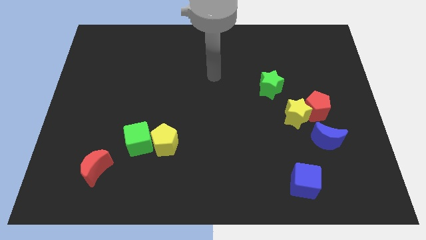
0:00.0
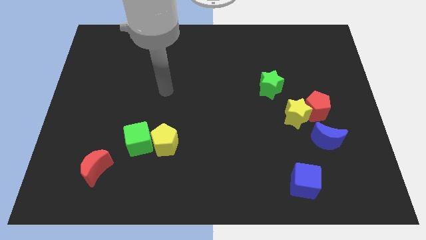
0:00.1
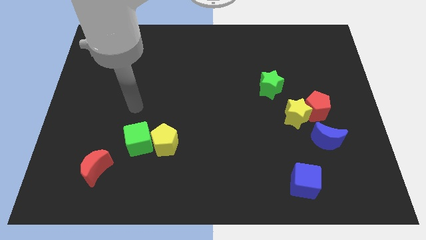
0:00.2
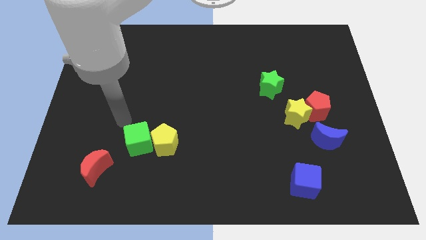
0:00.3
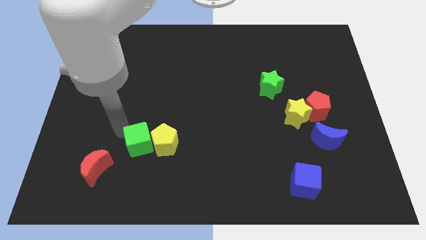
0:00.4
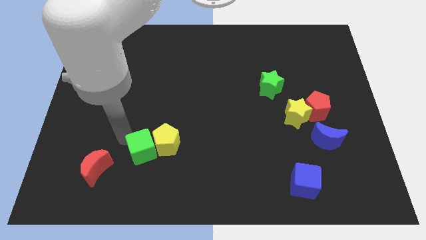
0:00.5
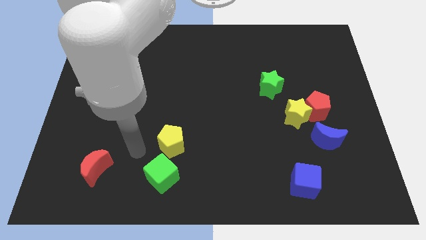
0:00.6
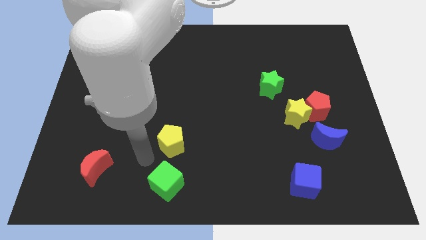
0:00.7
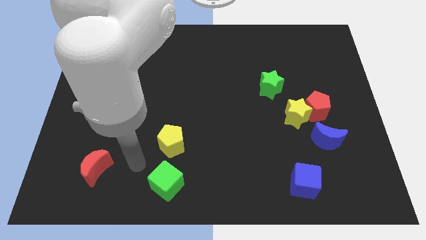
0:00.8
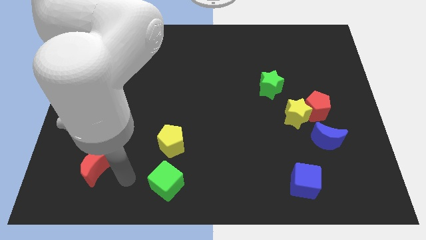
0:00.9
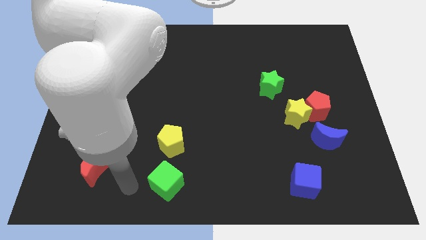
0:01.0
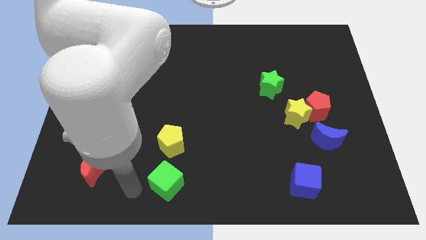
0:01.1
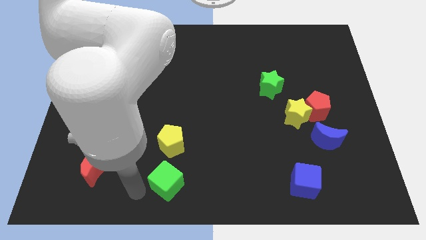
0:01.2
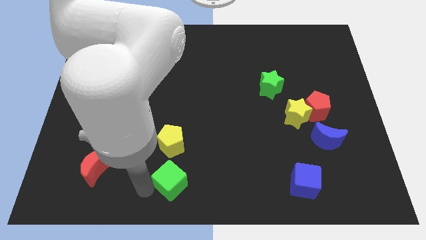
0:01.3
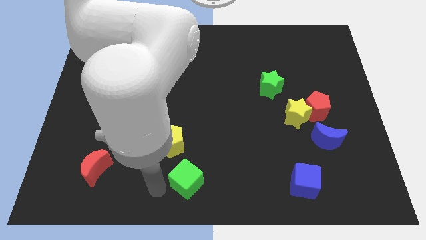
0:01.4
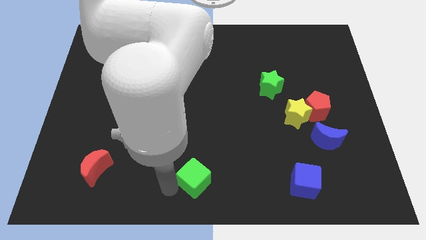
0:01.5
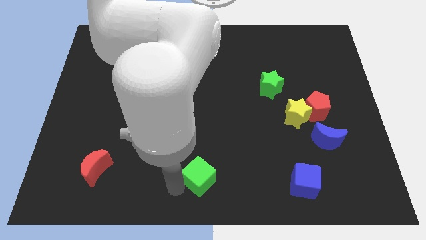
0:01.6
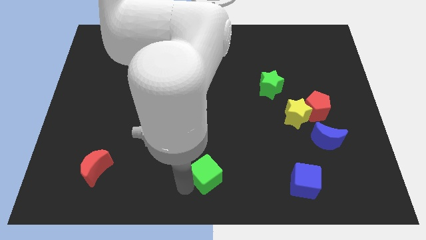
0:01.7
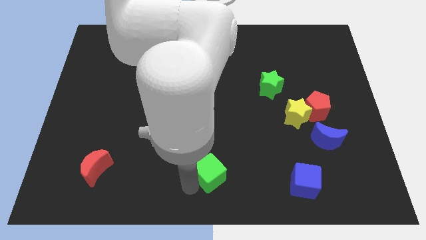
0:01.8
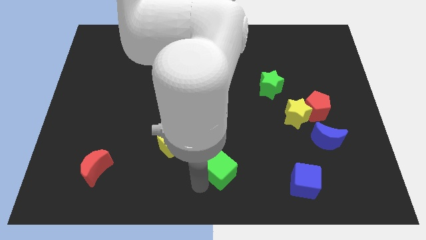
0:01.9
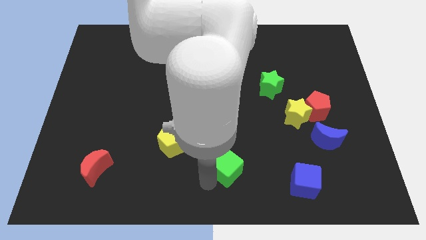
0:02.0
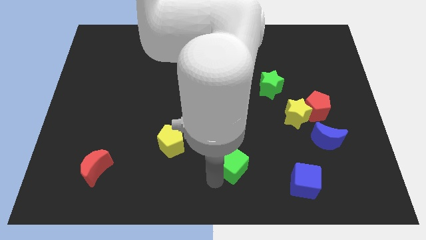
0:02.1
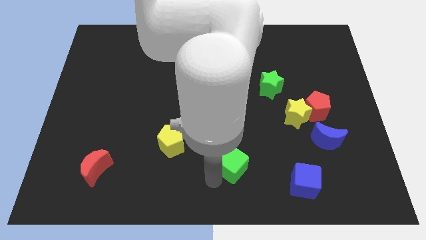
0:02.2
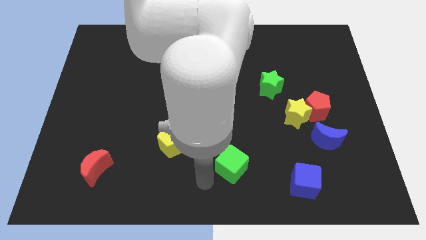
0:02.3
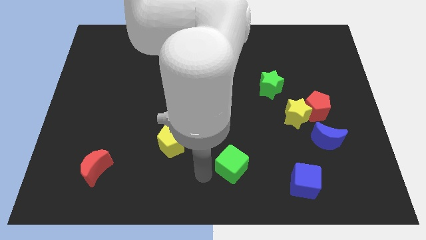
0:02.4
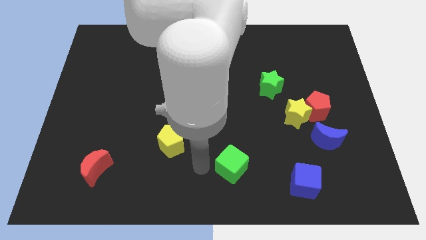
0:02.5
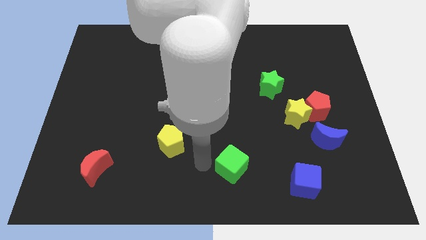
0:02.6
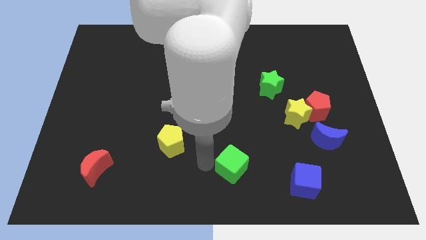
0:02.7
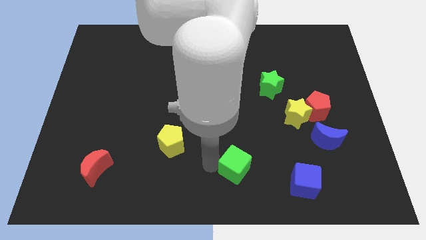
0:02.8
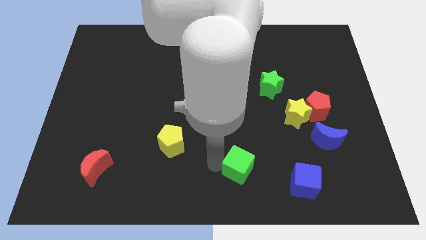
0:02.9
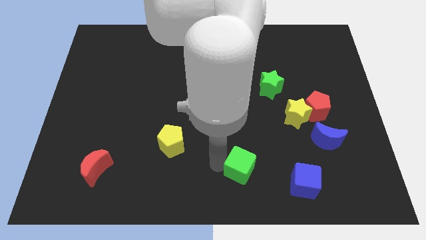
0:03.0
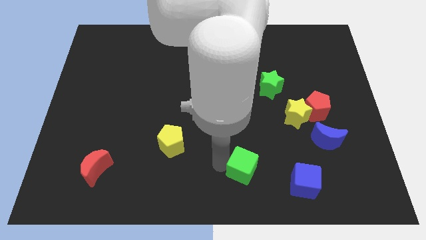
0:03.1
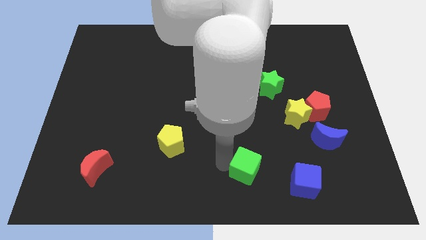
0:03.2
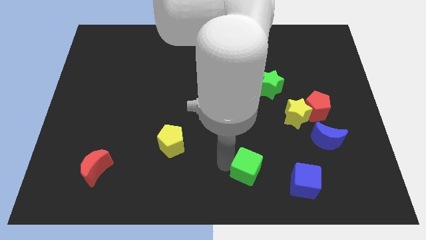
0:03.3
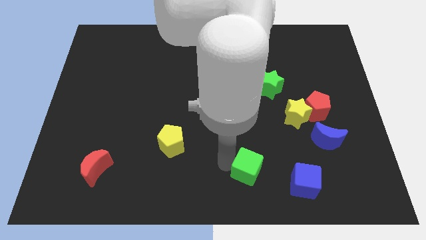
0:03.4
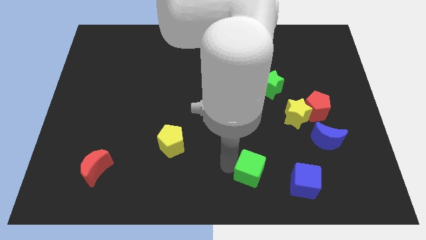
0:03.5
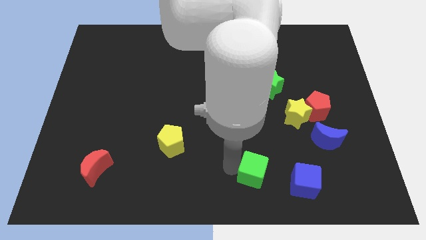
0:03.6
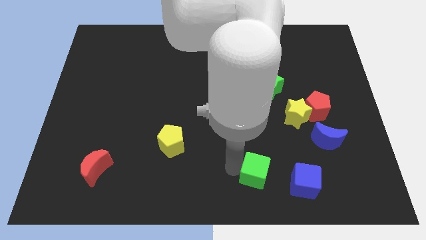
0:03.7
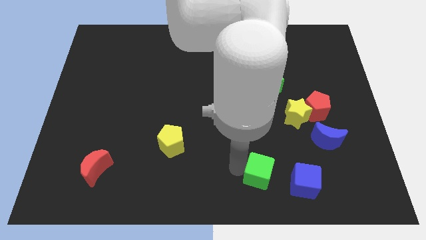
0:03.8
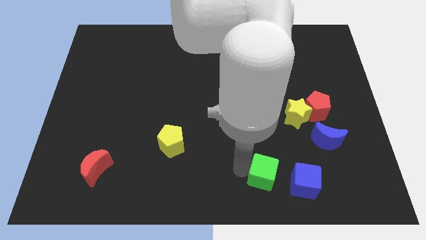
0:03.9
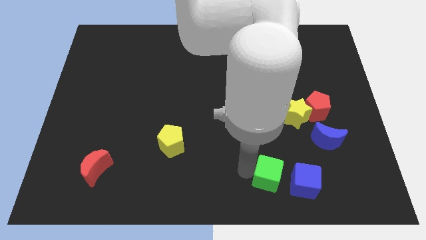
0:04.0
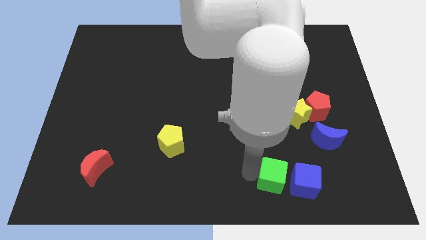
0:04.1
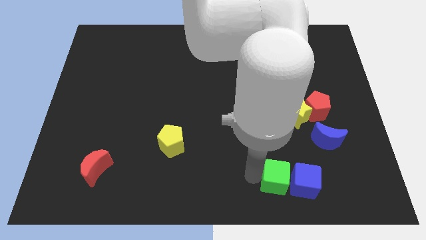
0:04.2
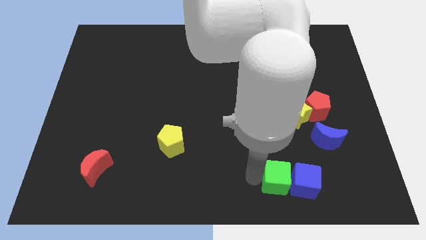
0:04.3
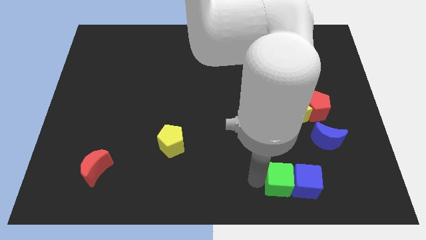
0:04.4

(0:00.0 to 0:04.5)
put the green cube close to the blue cube

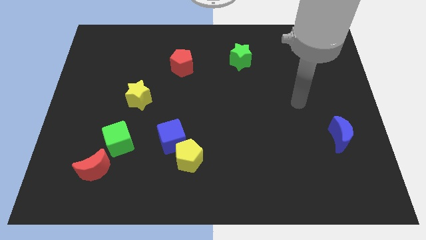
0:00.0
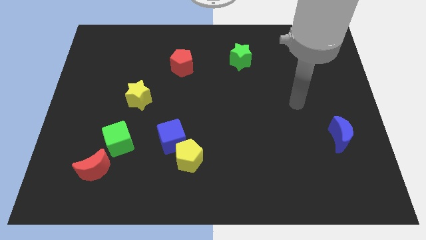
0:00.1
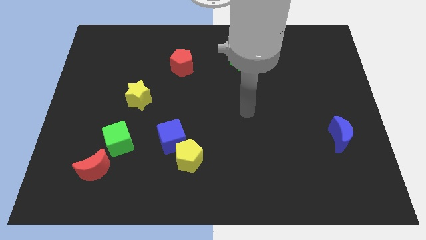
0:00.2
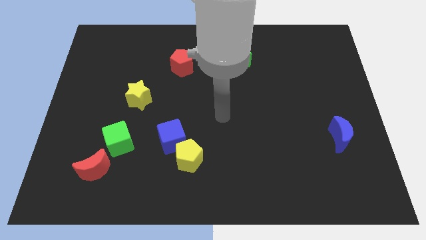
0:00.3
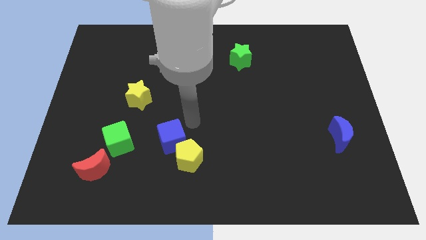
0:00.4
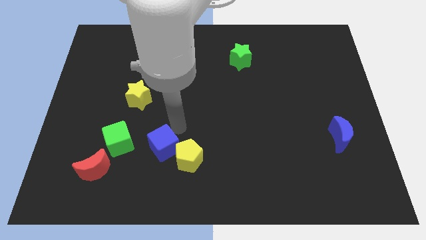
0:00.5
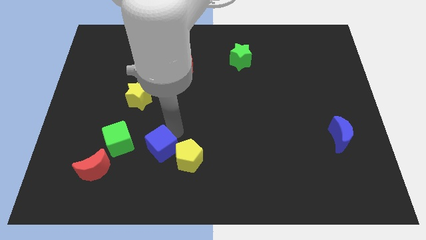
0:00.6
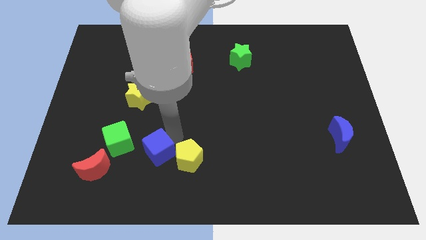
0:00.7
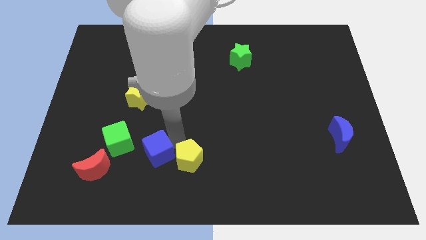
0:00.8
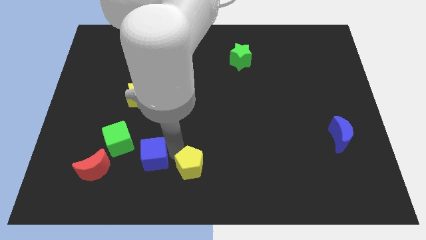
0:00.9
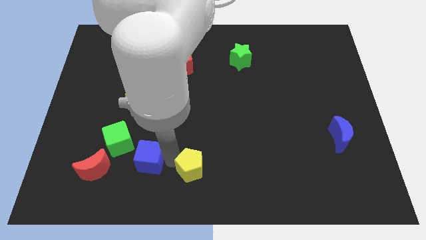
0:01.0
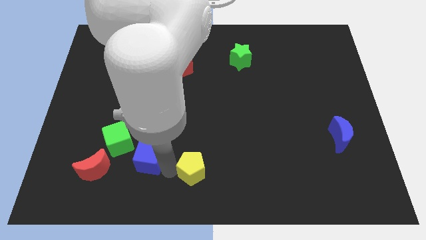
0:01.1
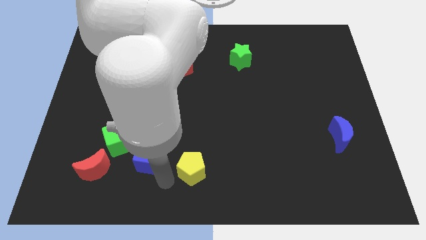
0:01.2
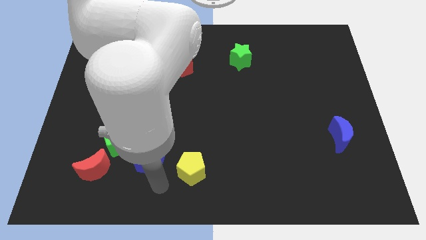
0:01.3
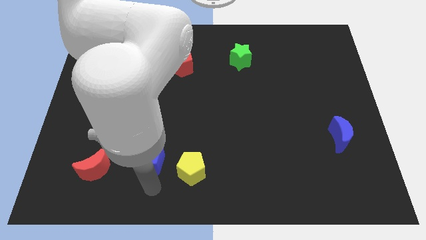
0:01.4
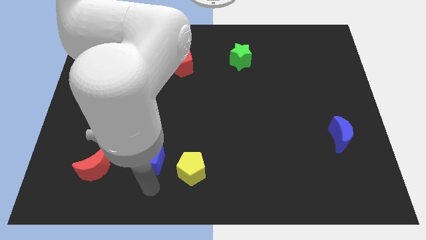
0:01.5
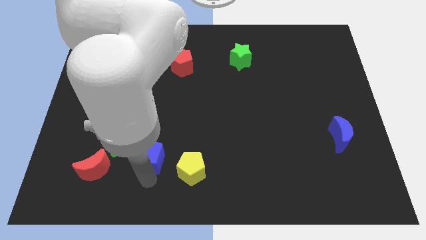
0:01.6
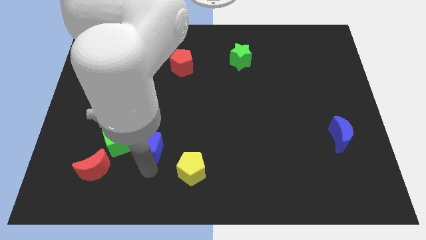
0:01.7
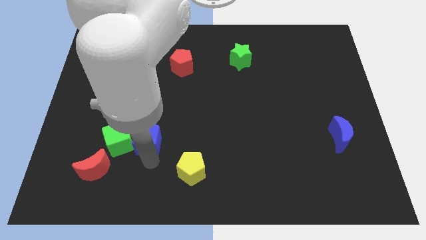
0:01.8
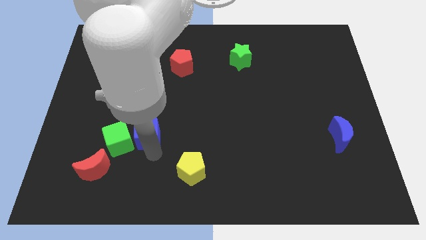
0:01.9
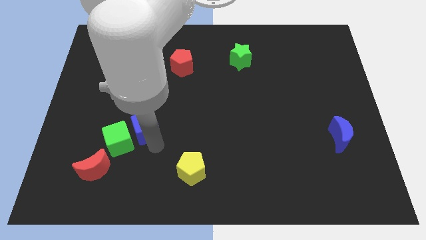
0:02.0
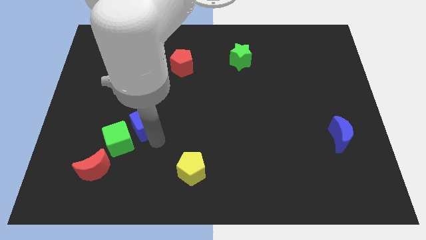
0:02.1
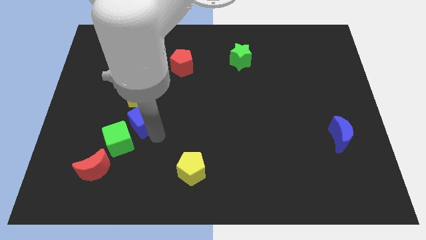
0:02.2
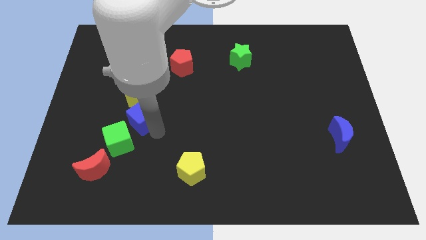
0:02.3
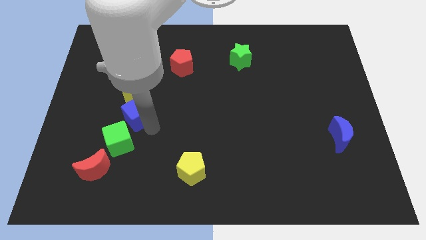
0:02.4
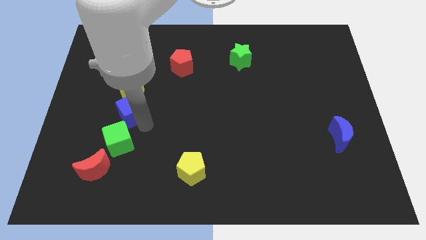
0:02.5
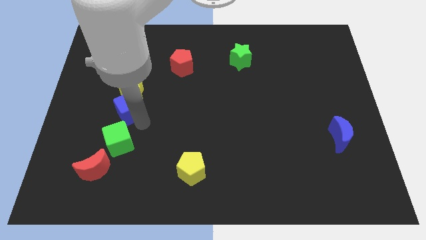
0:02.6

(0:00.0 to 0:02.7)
put the blue cube towards the yellow star

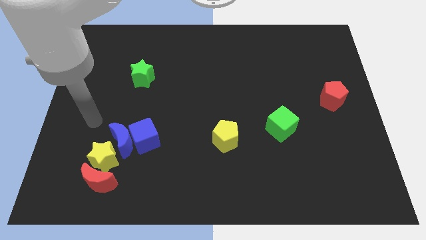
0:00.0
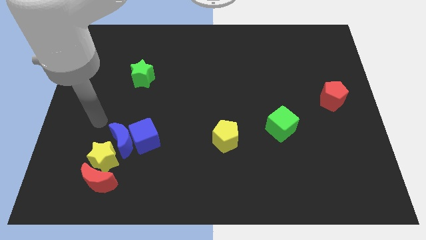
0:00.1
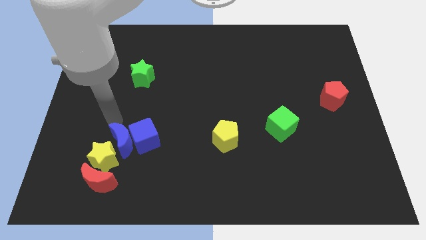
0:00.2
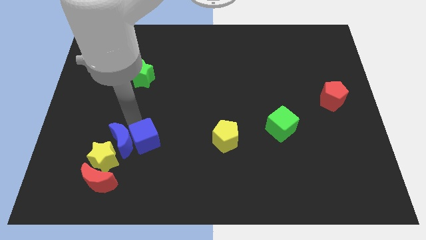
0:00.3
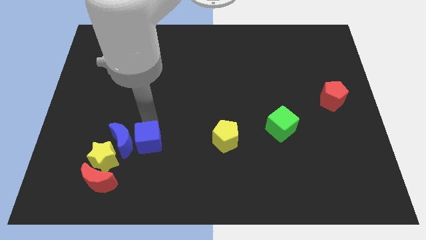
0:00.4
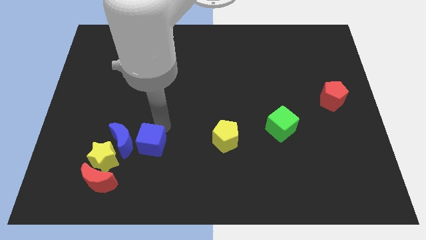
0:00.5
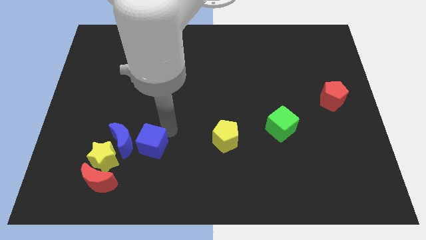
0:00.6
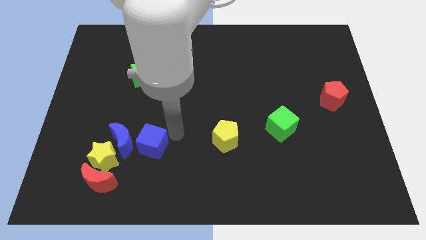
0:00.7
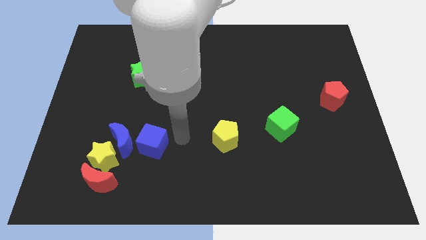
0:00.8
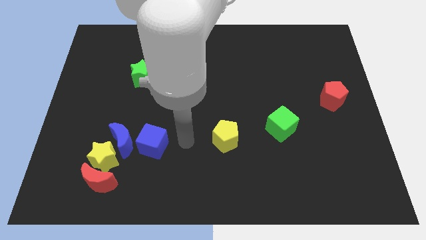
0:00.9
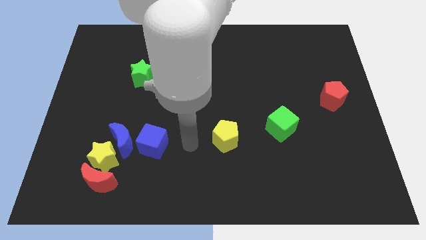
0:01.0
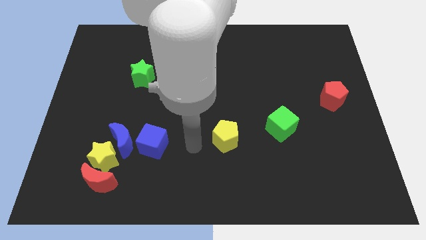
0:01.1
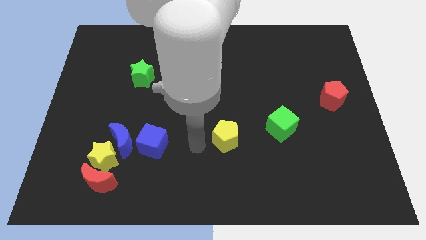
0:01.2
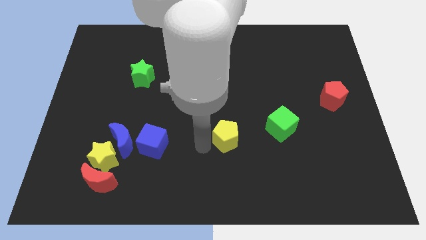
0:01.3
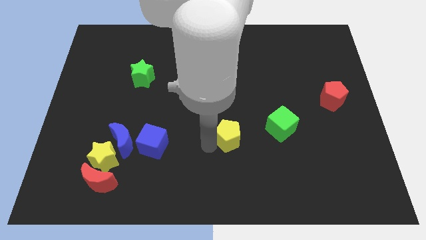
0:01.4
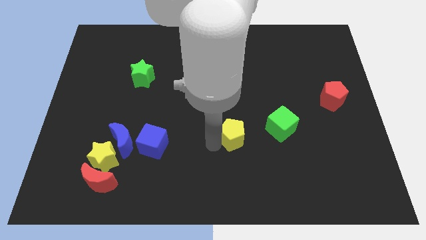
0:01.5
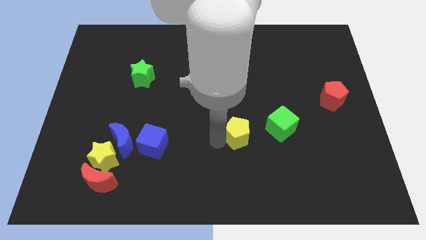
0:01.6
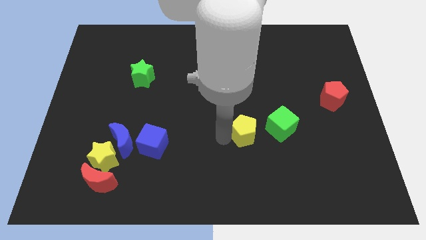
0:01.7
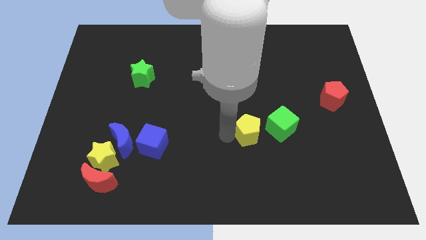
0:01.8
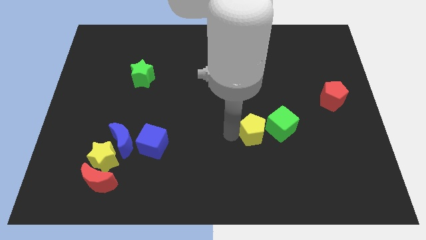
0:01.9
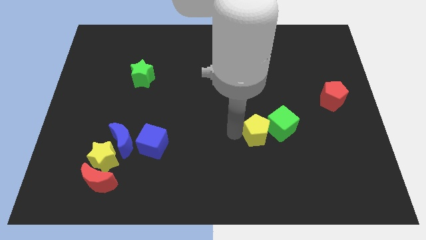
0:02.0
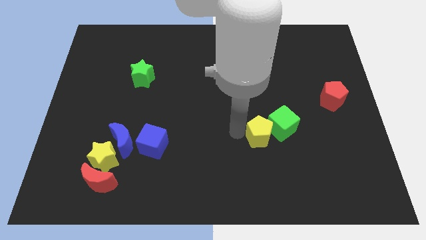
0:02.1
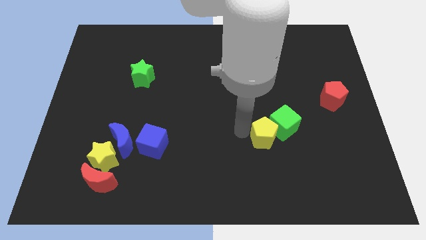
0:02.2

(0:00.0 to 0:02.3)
slide the yellow pentagon next to the green cube
